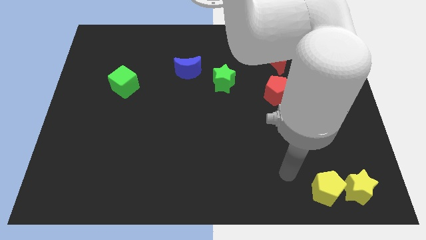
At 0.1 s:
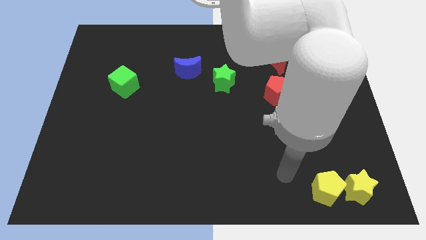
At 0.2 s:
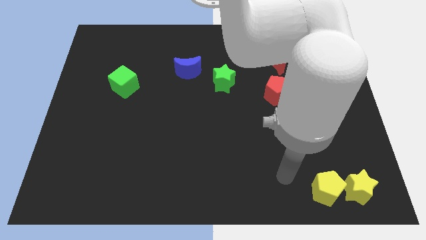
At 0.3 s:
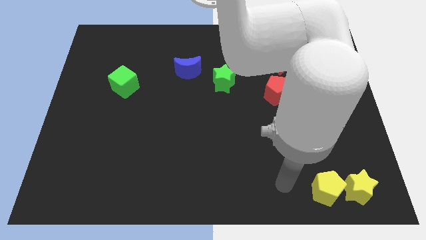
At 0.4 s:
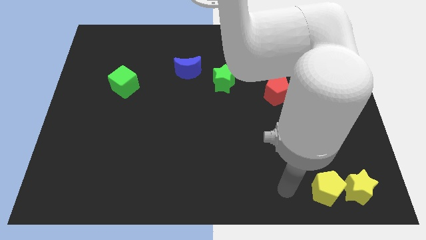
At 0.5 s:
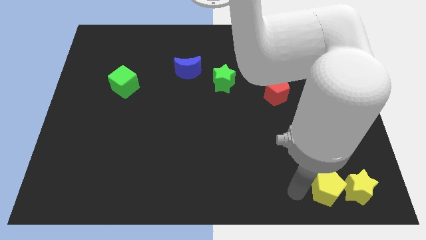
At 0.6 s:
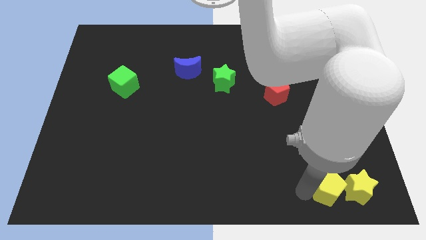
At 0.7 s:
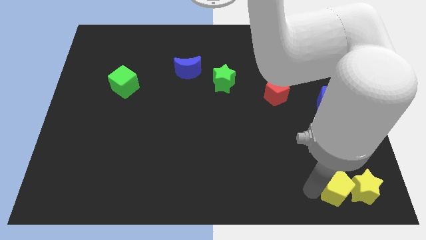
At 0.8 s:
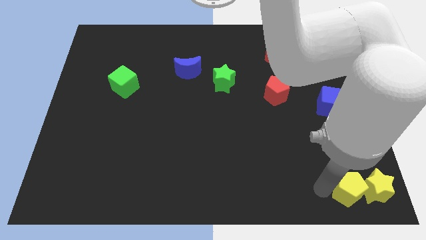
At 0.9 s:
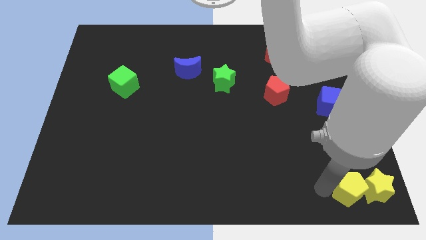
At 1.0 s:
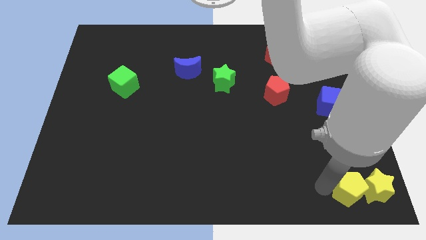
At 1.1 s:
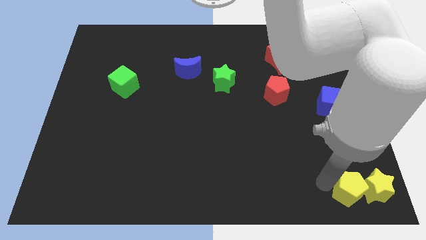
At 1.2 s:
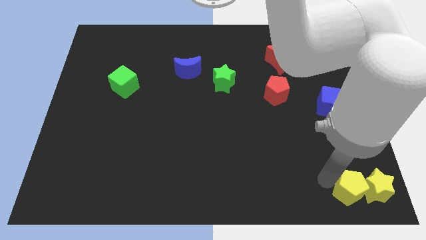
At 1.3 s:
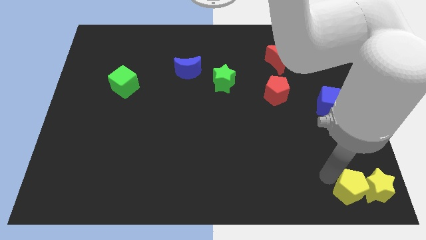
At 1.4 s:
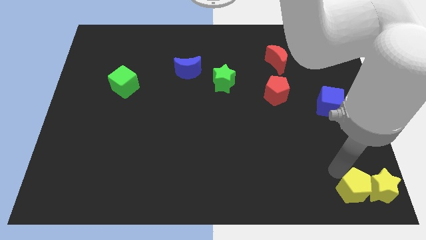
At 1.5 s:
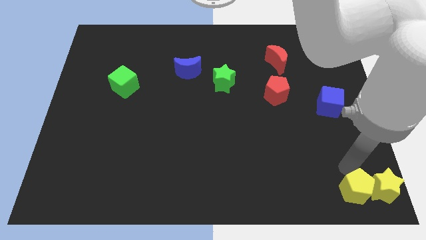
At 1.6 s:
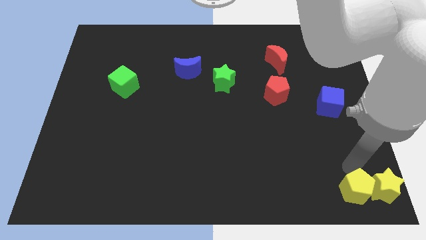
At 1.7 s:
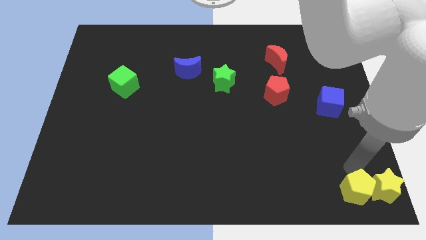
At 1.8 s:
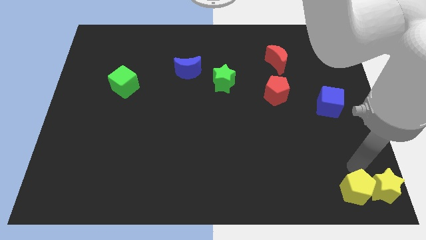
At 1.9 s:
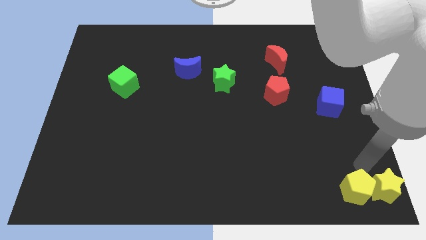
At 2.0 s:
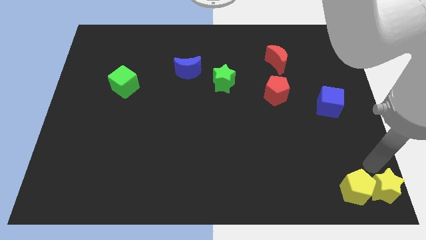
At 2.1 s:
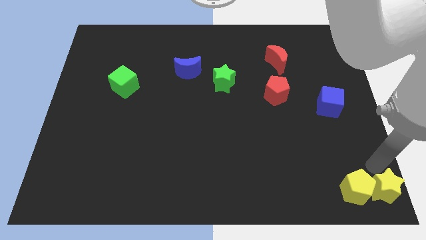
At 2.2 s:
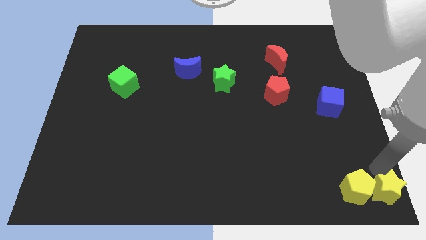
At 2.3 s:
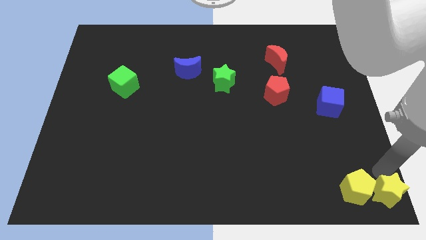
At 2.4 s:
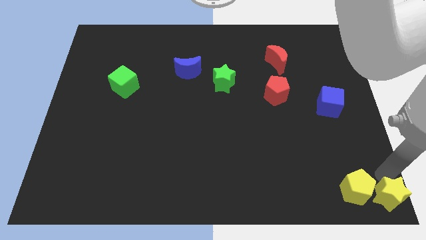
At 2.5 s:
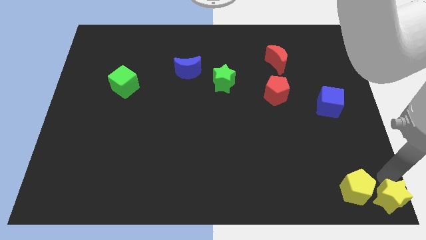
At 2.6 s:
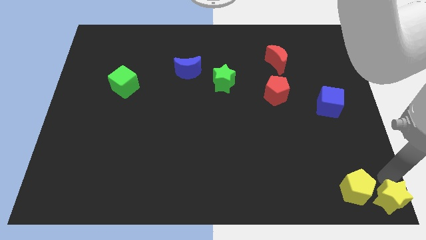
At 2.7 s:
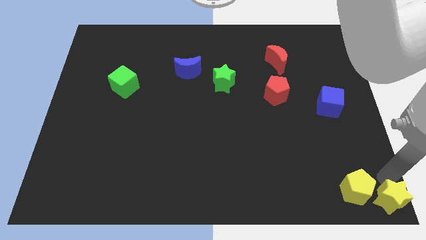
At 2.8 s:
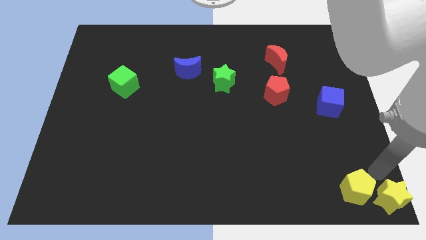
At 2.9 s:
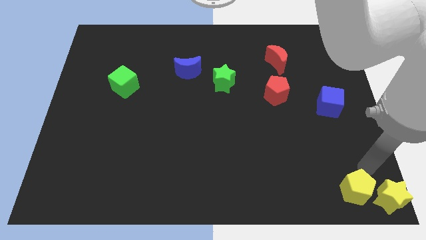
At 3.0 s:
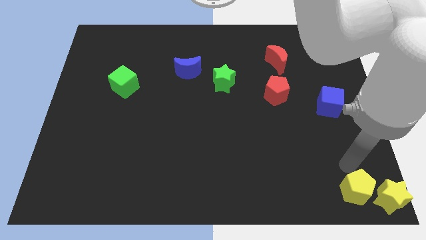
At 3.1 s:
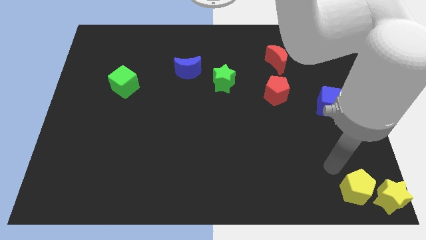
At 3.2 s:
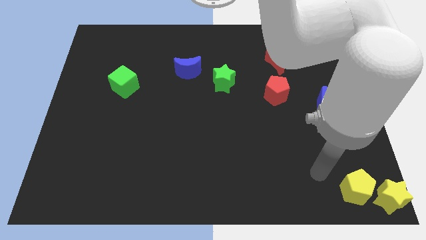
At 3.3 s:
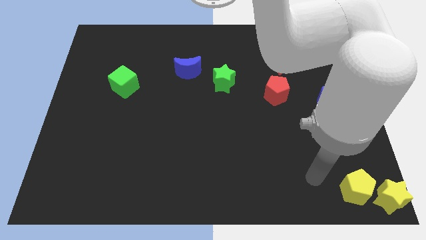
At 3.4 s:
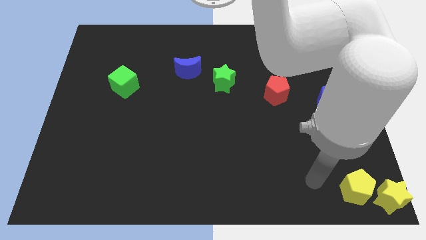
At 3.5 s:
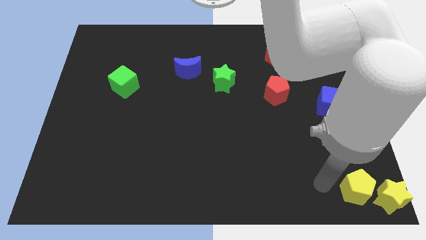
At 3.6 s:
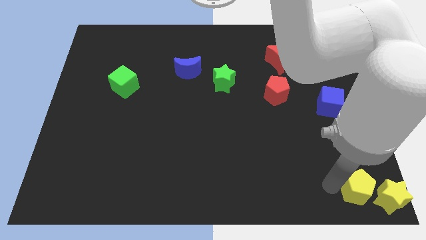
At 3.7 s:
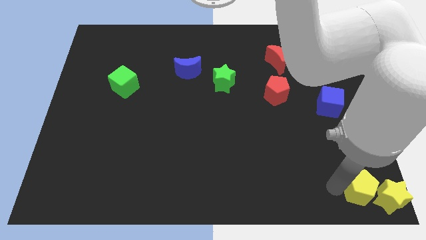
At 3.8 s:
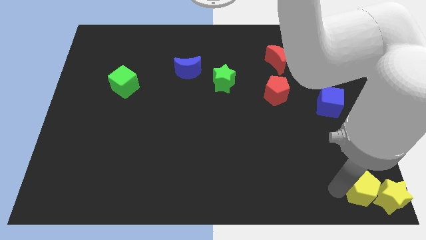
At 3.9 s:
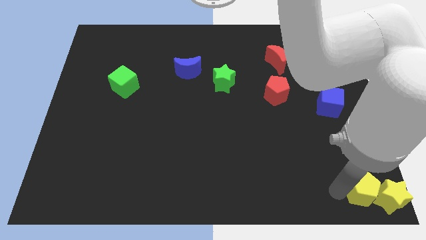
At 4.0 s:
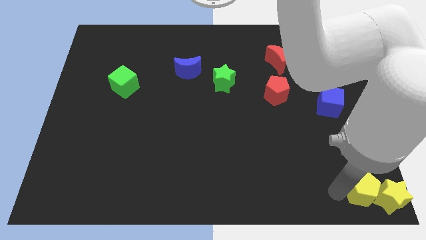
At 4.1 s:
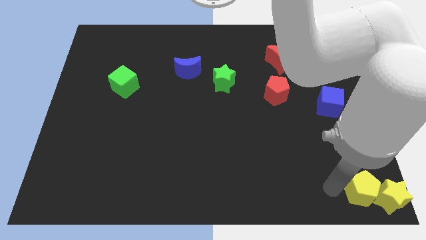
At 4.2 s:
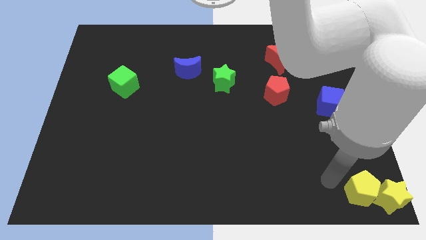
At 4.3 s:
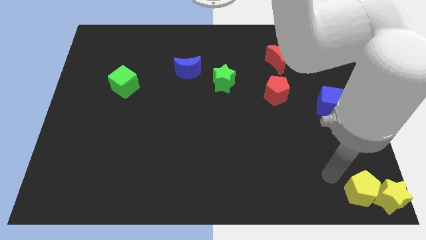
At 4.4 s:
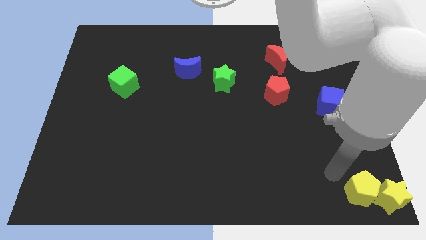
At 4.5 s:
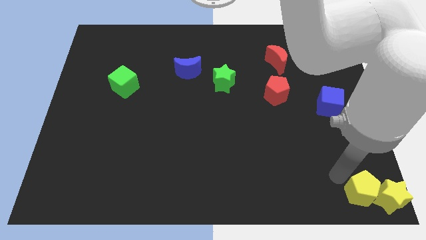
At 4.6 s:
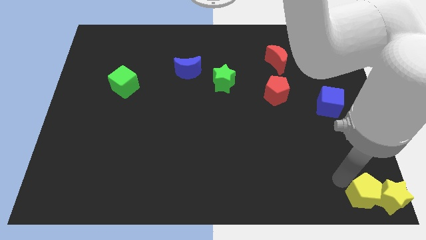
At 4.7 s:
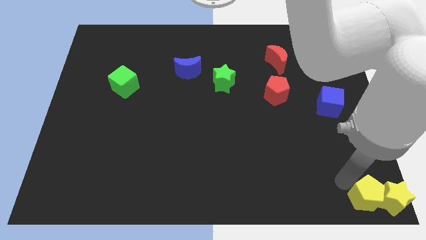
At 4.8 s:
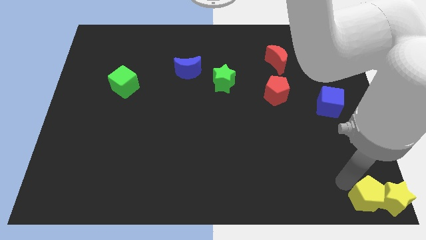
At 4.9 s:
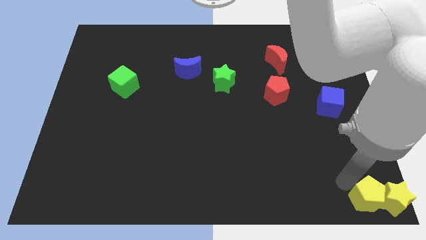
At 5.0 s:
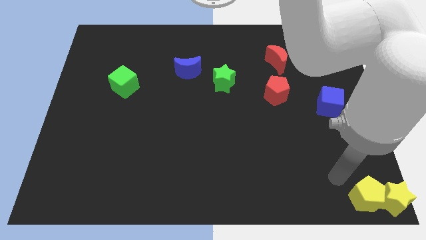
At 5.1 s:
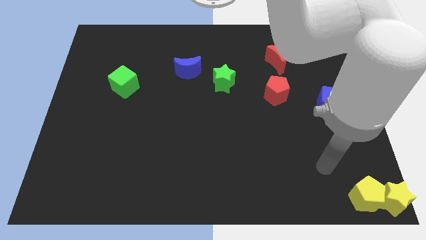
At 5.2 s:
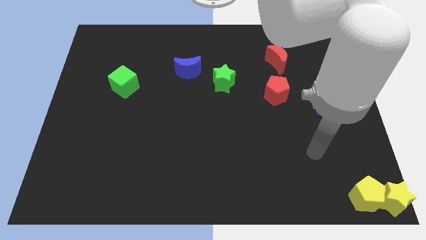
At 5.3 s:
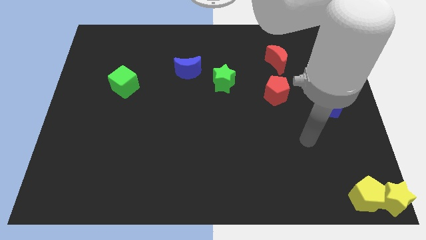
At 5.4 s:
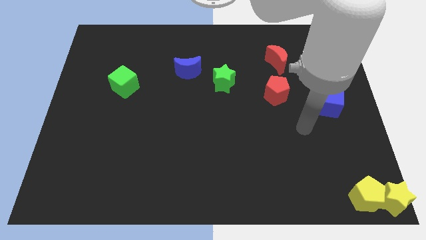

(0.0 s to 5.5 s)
put the yellow blocks at the bottom right corner

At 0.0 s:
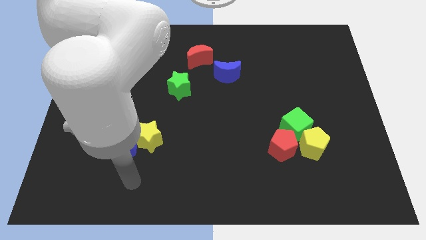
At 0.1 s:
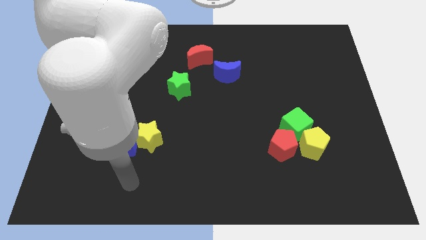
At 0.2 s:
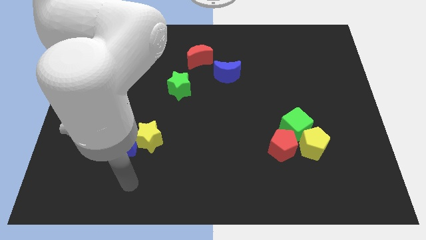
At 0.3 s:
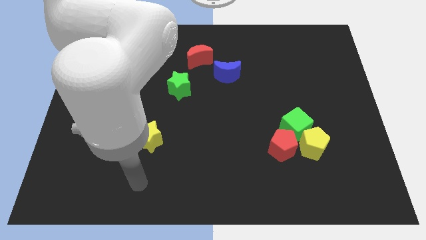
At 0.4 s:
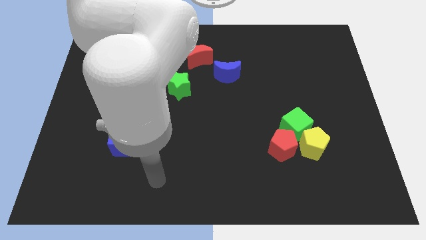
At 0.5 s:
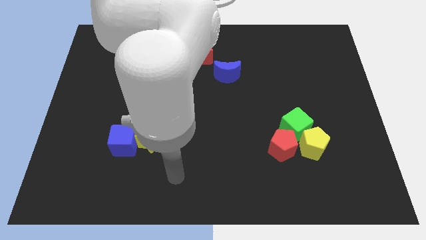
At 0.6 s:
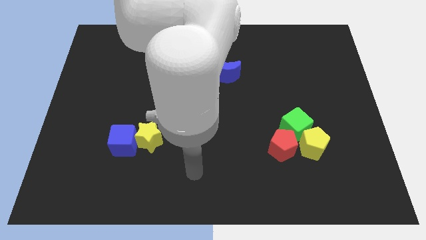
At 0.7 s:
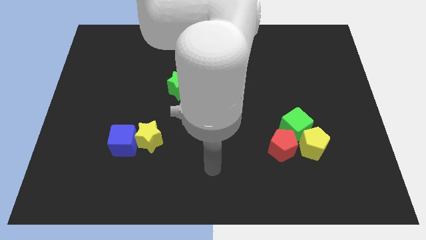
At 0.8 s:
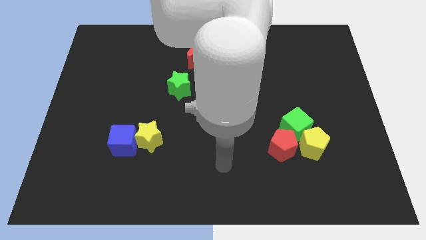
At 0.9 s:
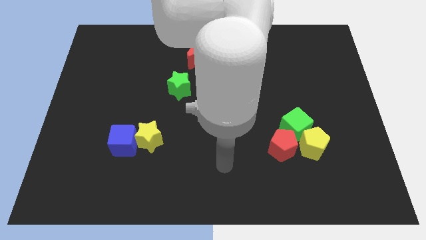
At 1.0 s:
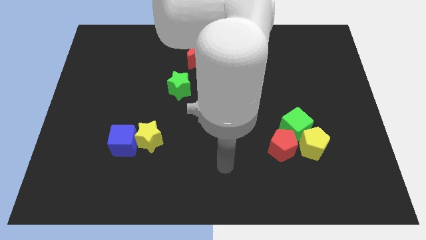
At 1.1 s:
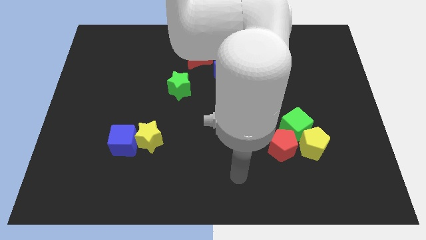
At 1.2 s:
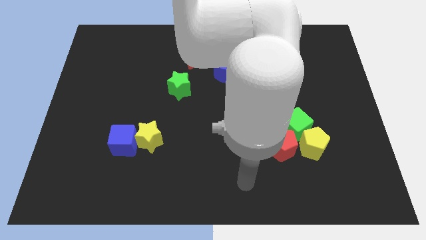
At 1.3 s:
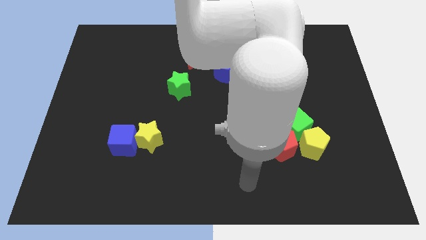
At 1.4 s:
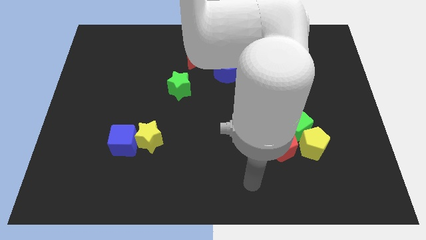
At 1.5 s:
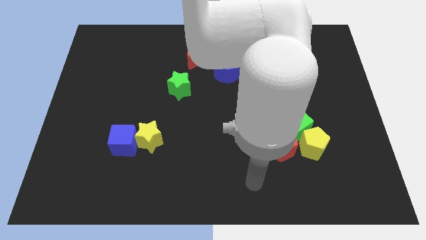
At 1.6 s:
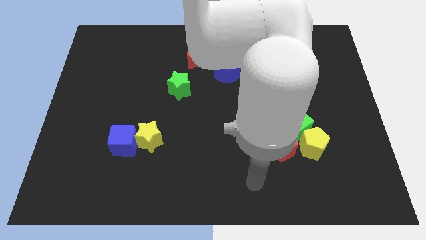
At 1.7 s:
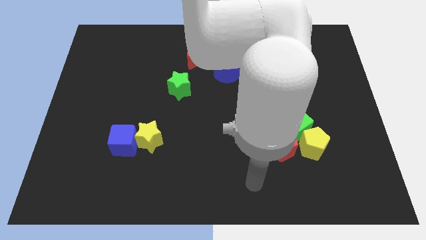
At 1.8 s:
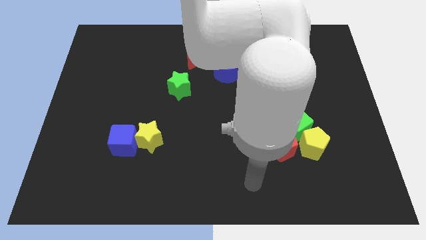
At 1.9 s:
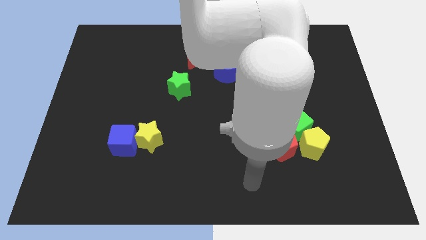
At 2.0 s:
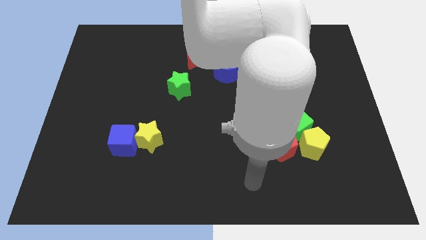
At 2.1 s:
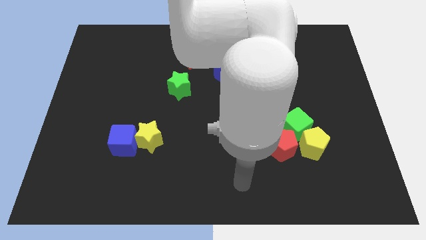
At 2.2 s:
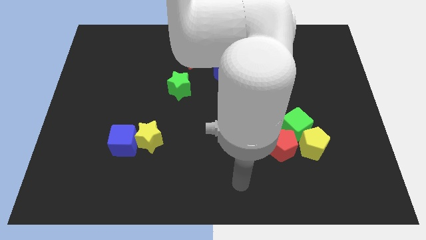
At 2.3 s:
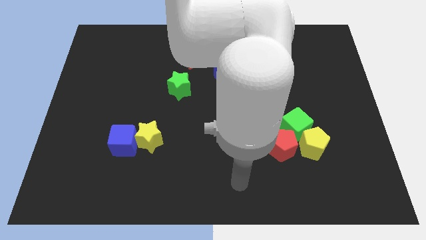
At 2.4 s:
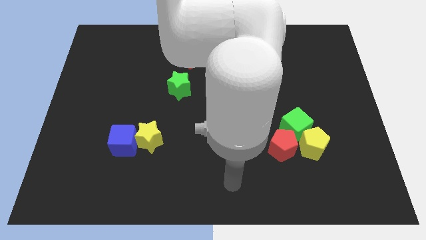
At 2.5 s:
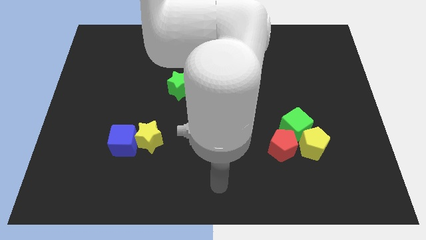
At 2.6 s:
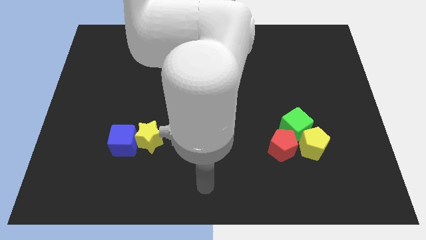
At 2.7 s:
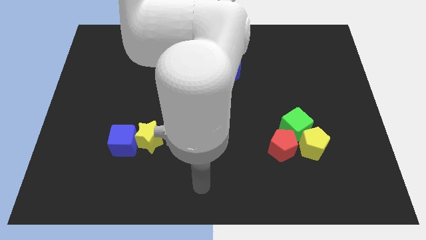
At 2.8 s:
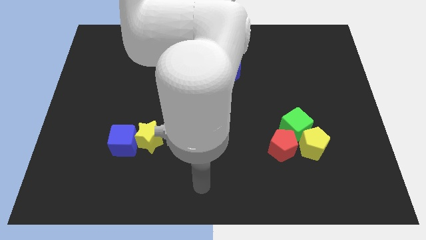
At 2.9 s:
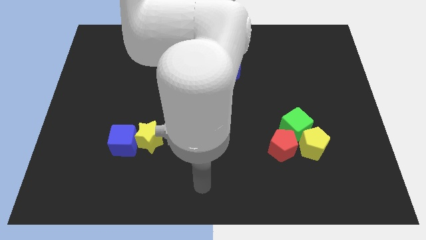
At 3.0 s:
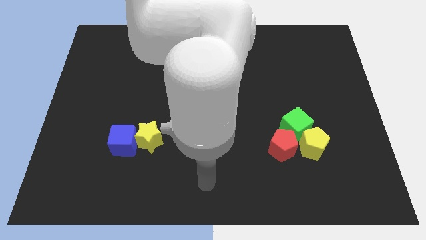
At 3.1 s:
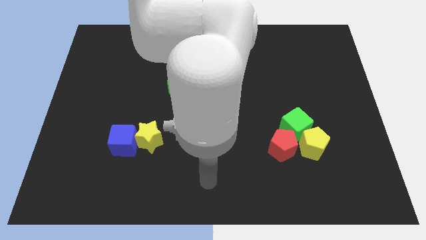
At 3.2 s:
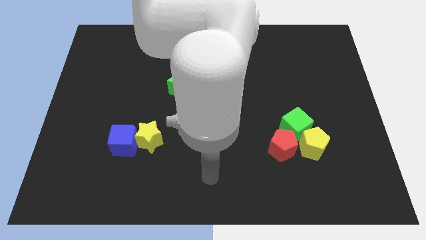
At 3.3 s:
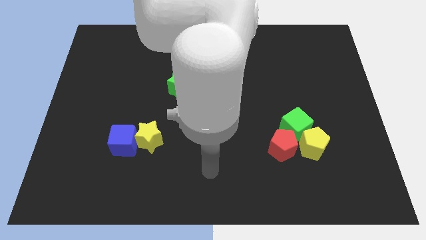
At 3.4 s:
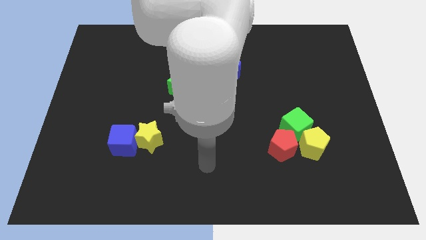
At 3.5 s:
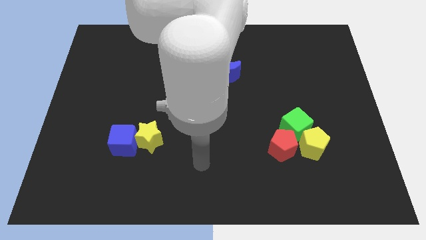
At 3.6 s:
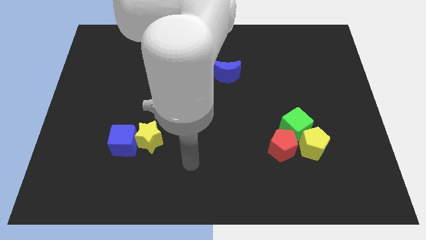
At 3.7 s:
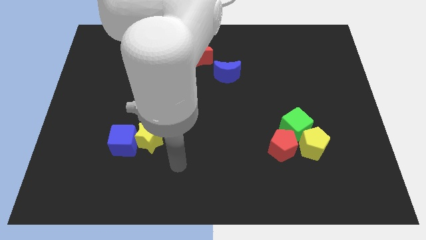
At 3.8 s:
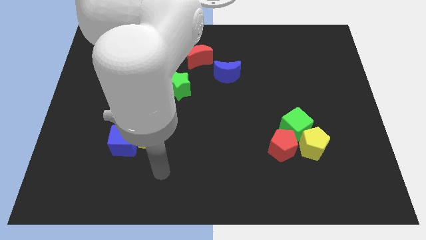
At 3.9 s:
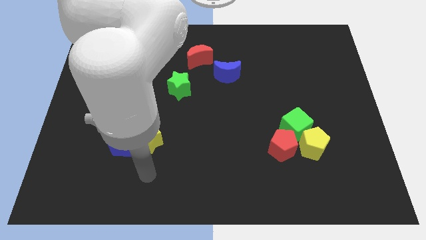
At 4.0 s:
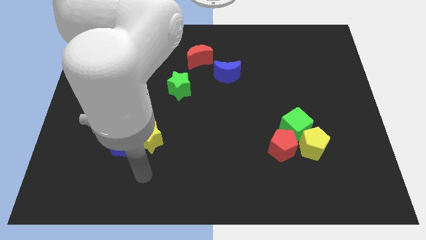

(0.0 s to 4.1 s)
point your arm at the bottom of the yellow star
